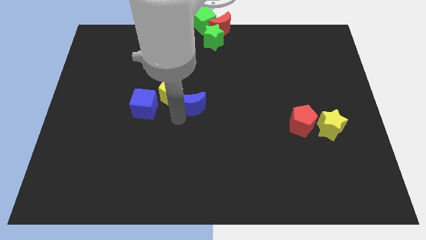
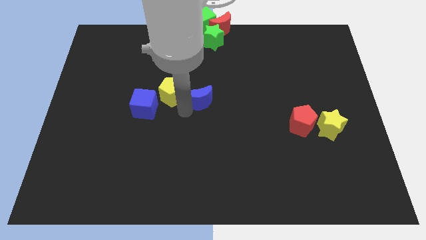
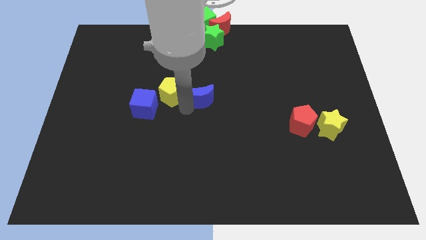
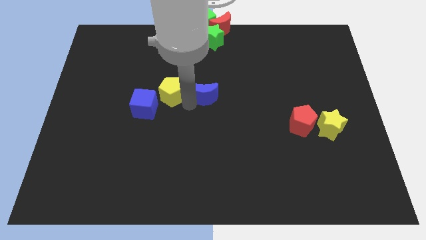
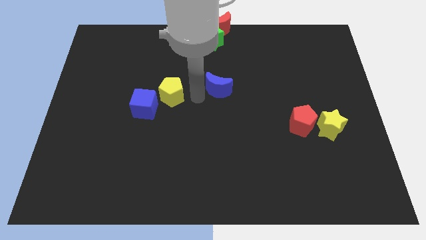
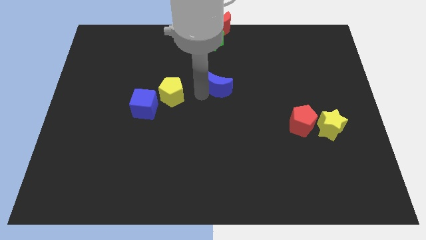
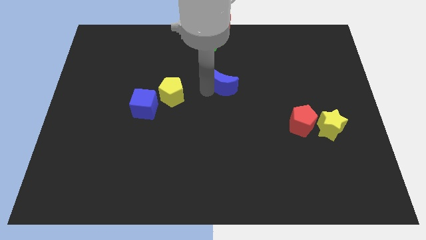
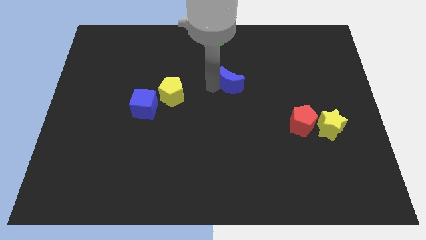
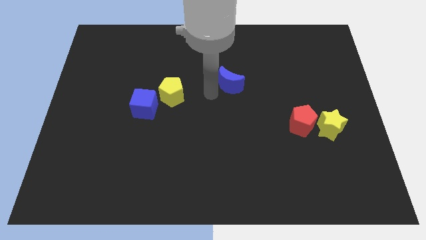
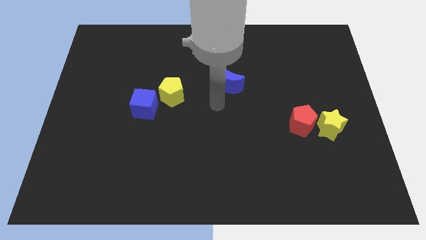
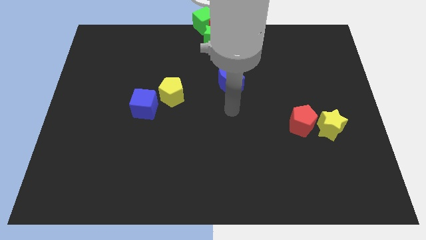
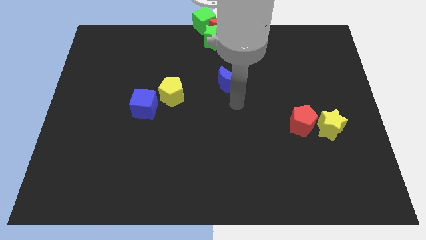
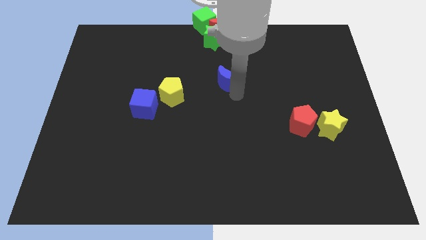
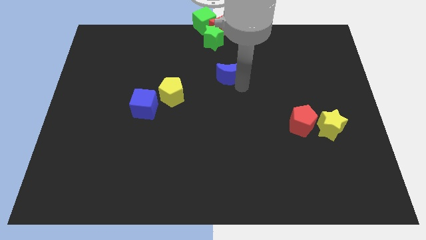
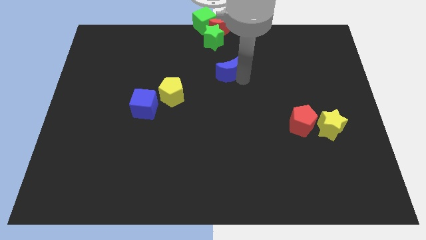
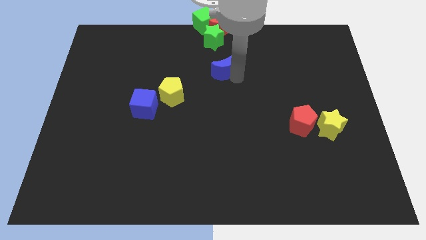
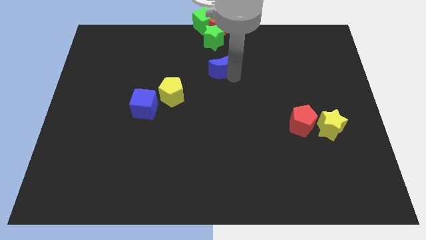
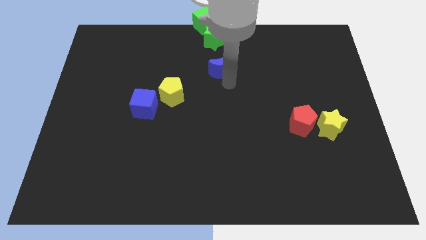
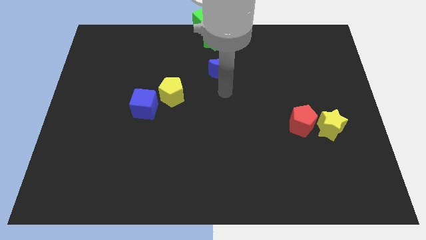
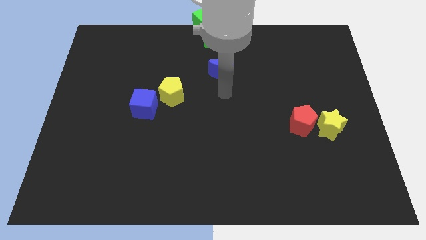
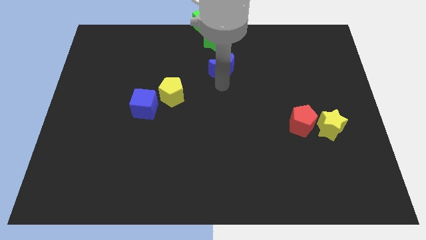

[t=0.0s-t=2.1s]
push the blue moon towards the green star

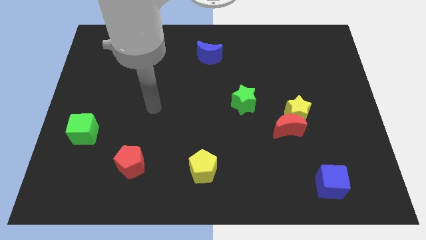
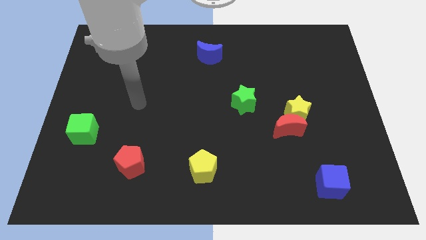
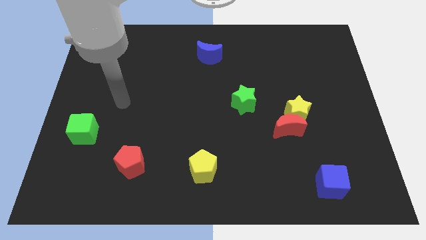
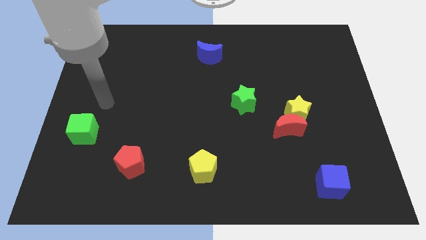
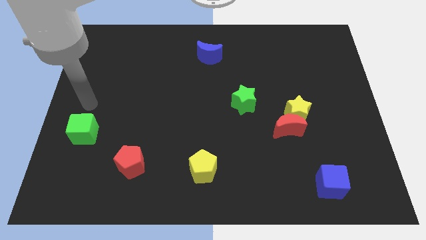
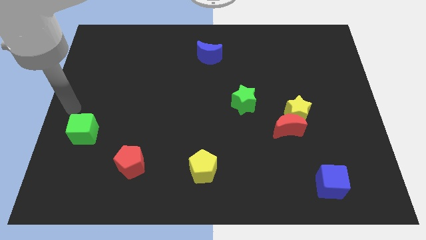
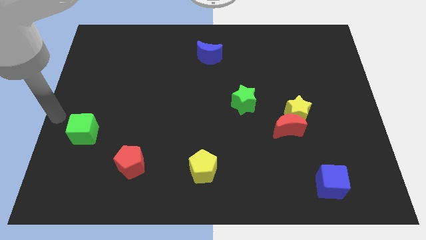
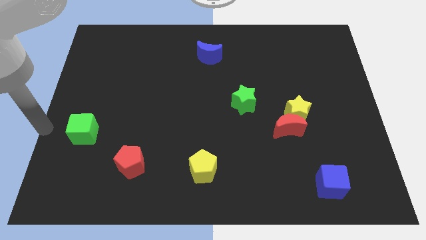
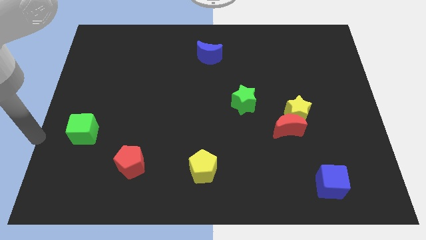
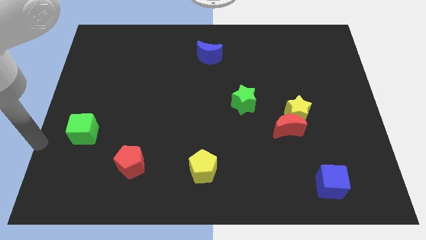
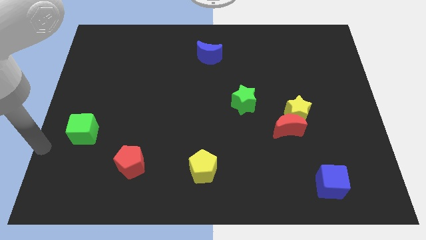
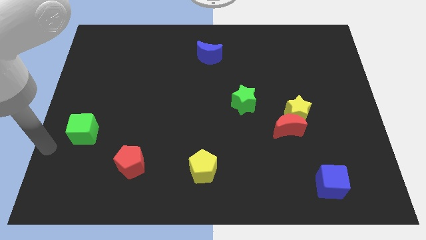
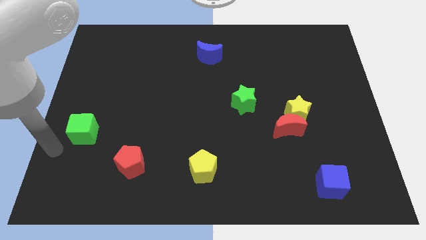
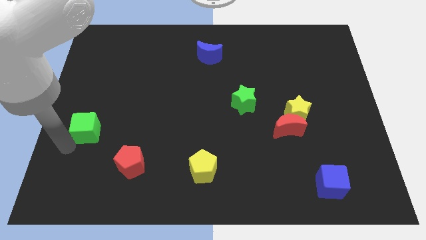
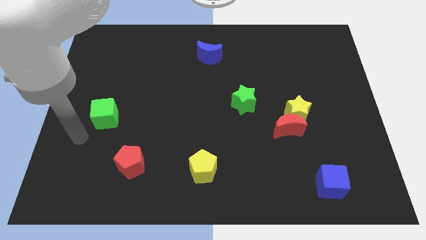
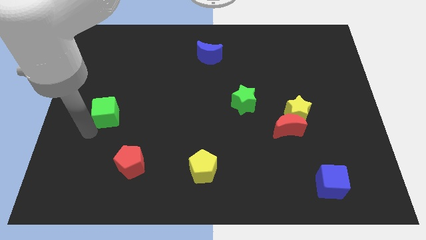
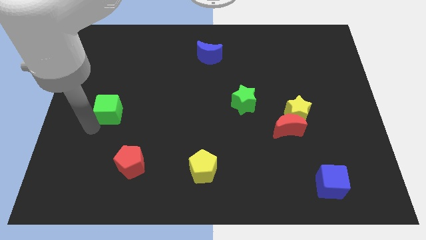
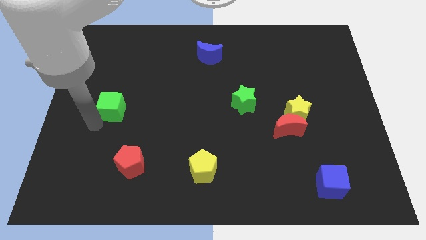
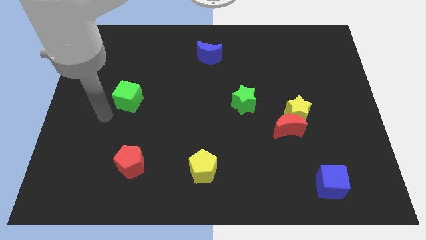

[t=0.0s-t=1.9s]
slide the green cube towards the top side of the board

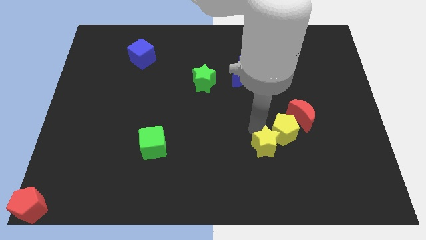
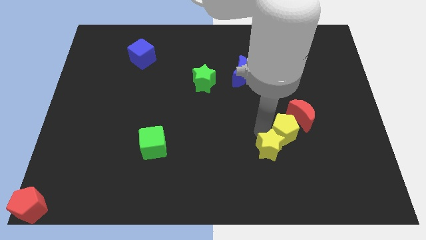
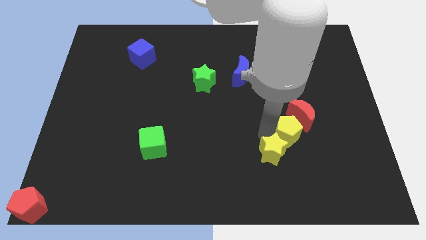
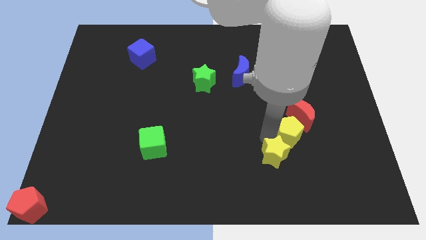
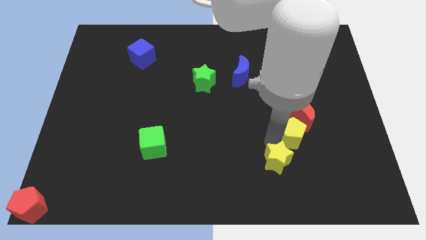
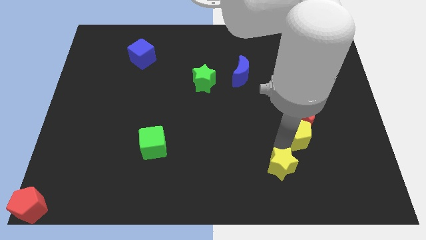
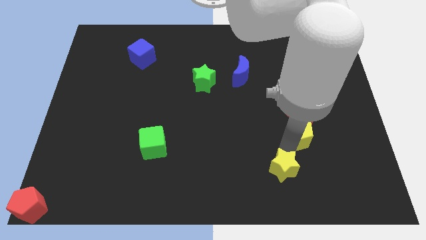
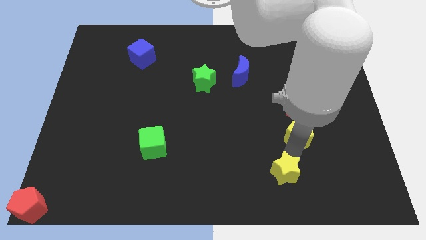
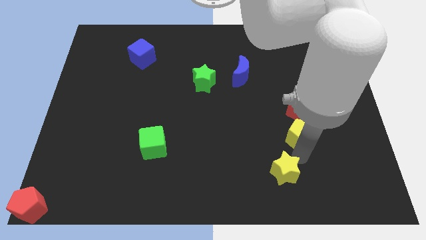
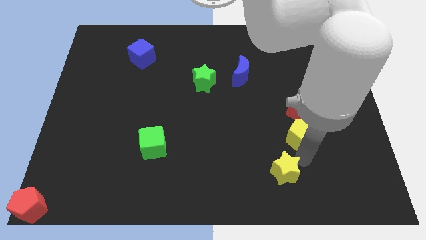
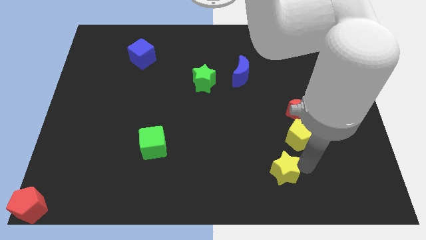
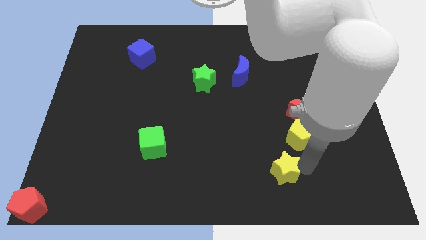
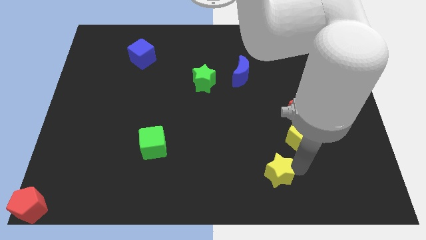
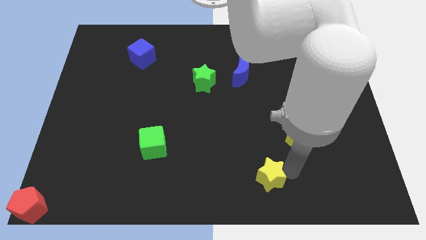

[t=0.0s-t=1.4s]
separate the yellow star from yellow pentagon

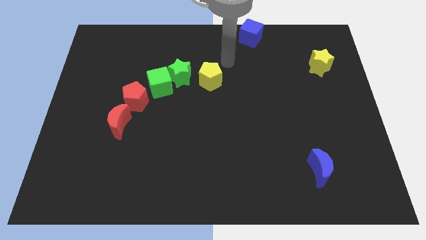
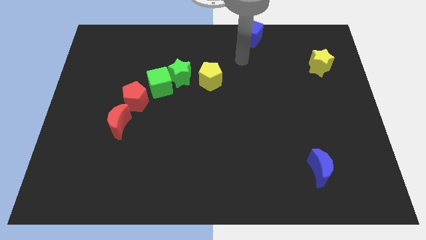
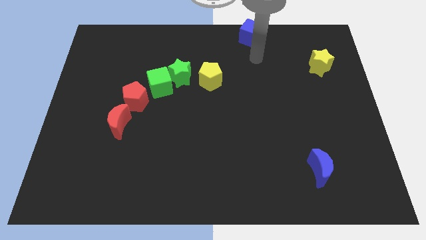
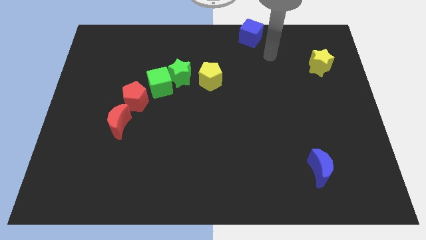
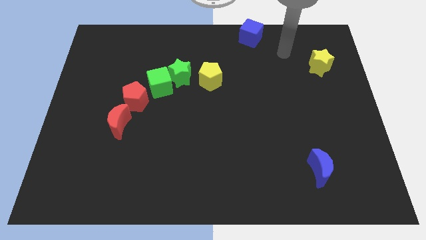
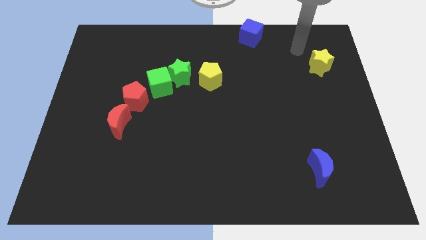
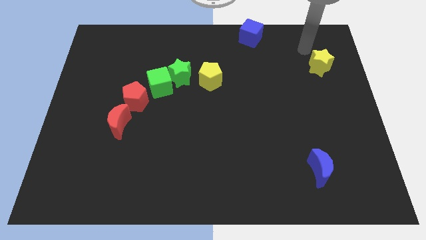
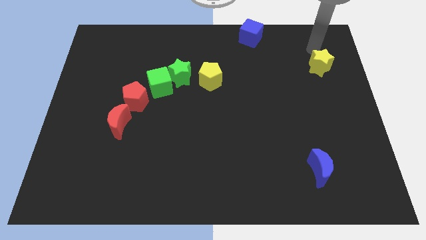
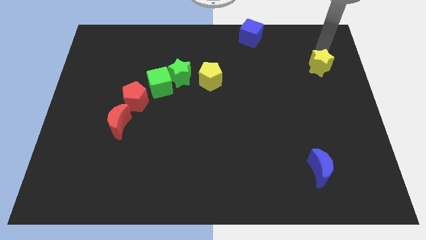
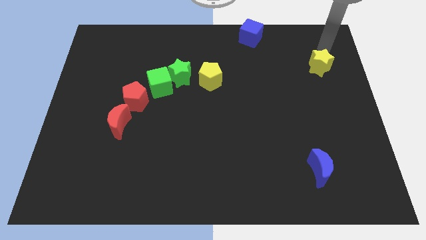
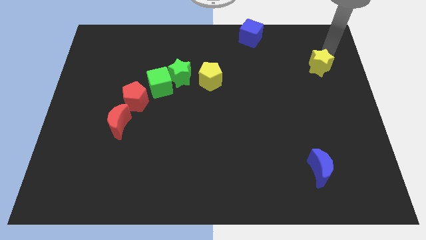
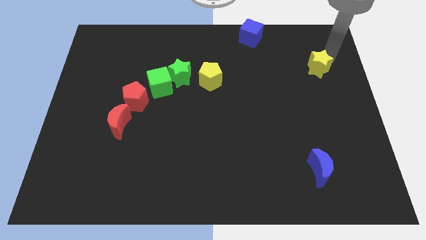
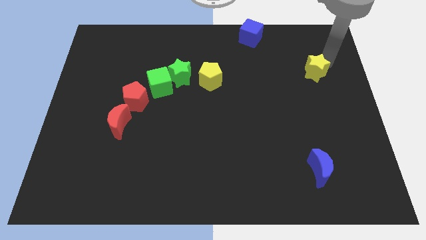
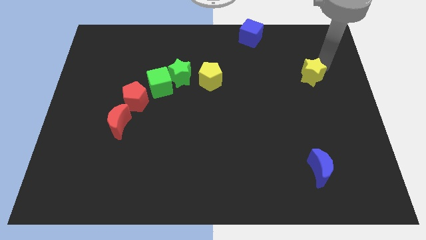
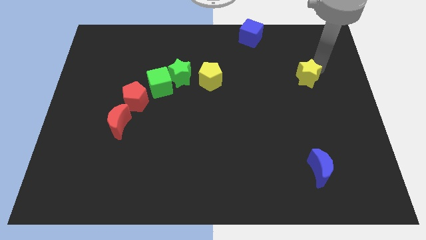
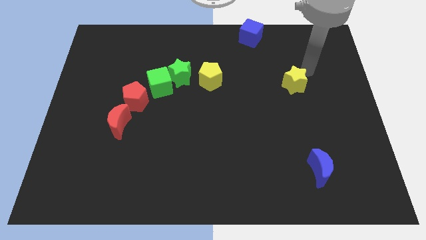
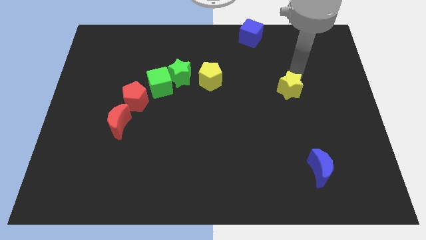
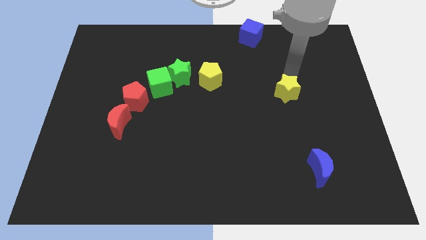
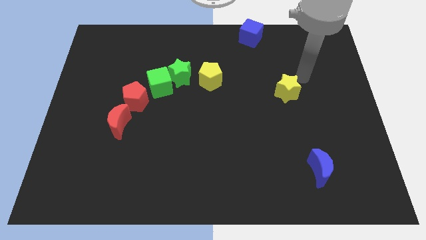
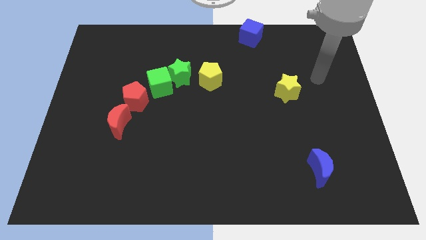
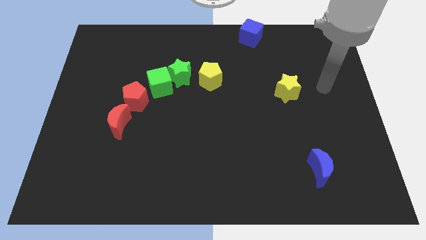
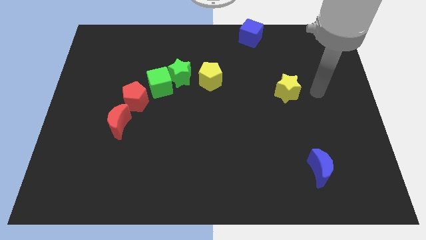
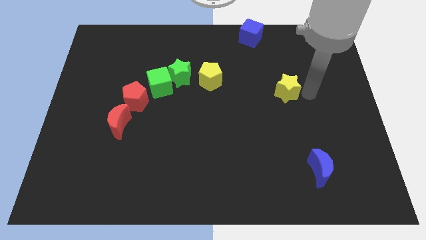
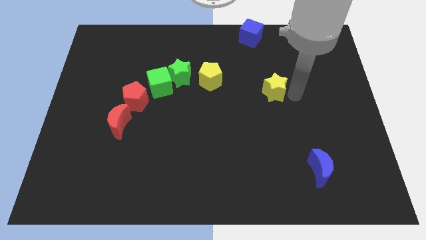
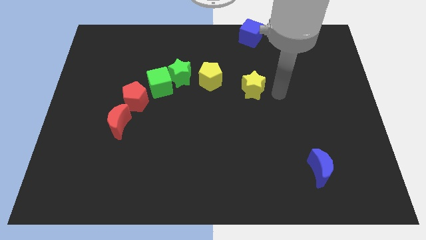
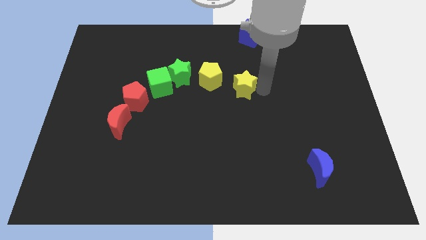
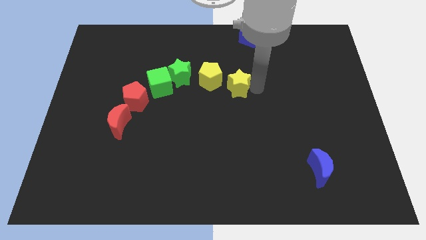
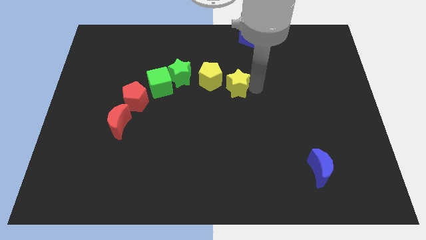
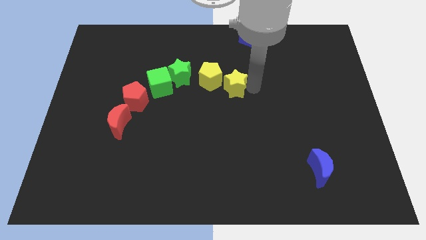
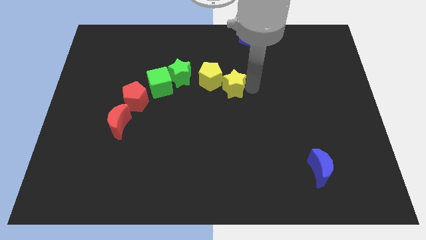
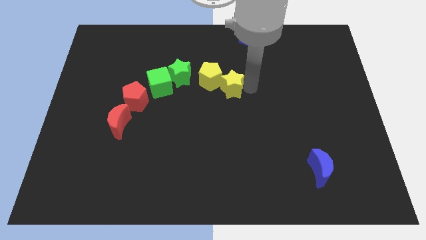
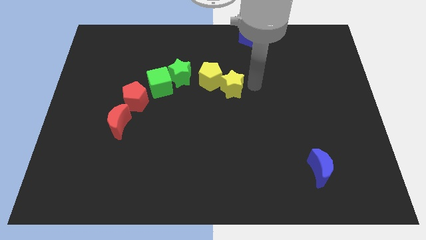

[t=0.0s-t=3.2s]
move the yellow star towards the center of the board
